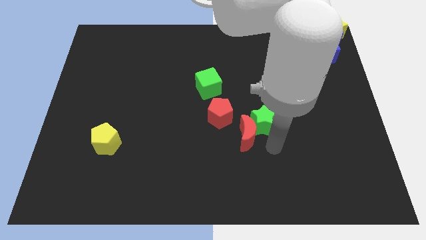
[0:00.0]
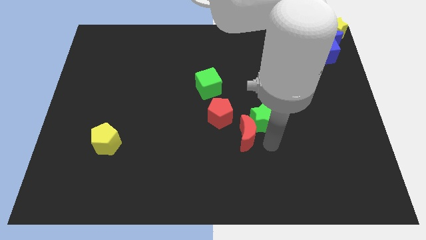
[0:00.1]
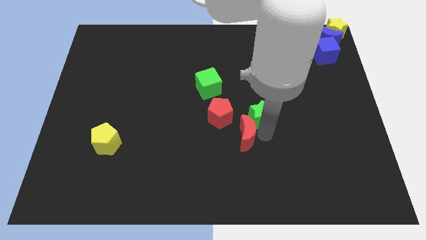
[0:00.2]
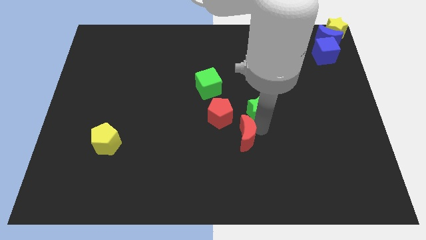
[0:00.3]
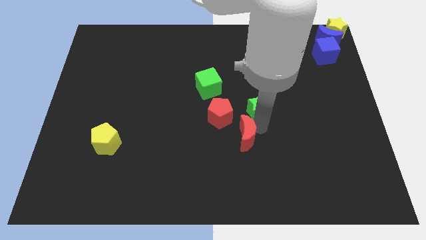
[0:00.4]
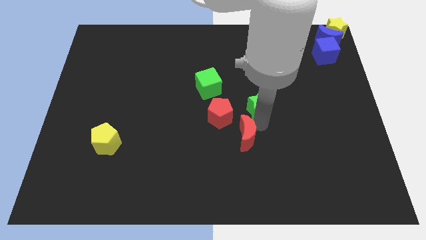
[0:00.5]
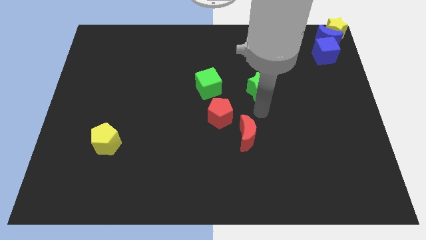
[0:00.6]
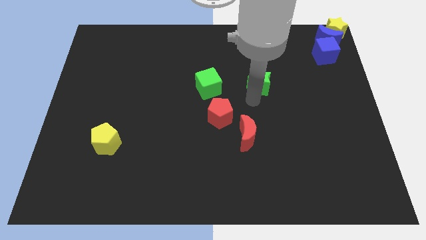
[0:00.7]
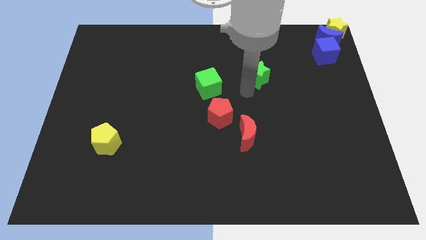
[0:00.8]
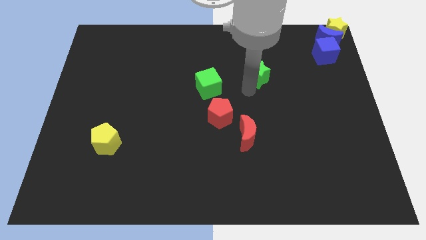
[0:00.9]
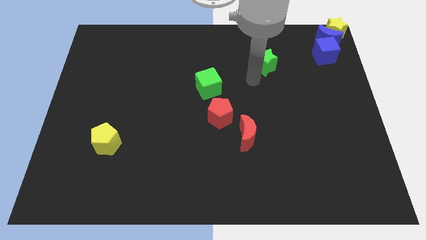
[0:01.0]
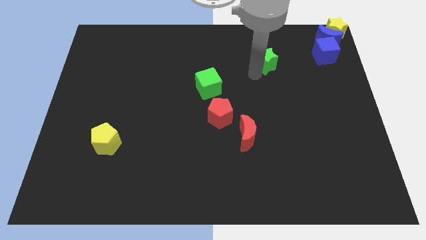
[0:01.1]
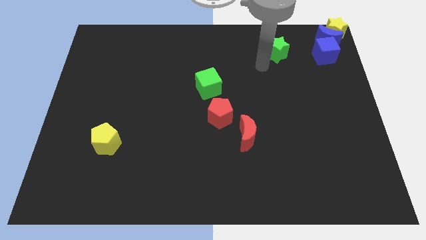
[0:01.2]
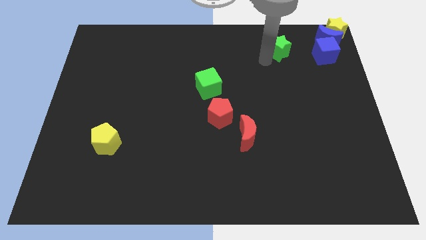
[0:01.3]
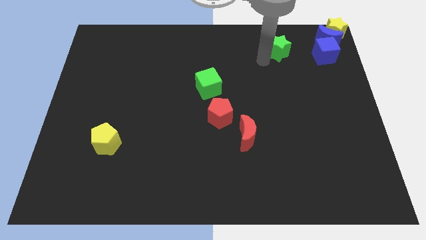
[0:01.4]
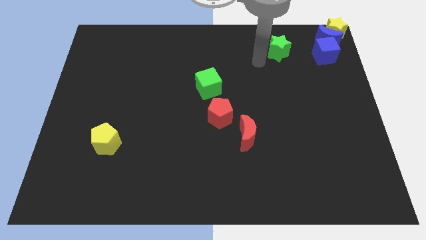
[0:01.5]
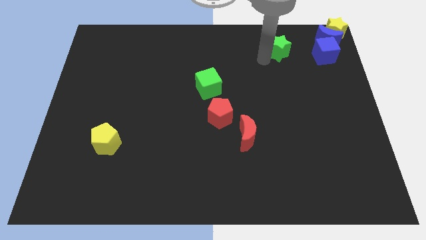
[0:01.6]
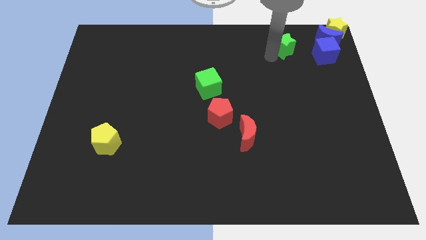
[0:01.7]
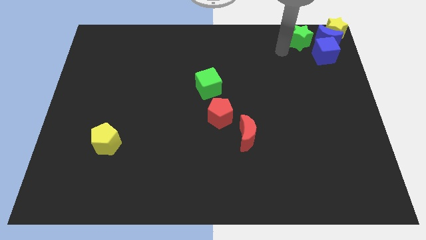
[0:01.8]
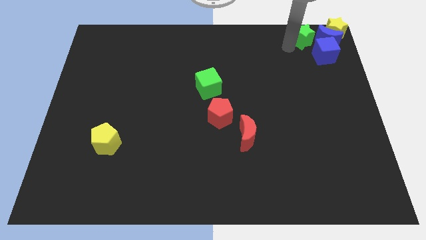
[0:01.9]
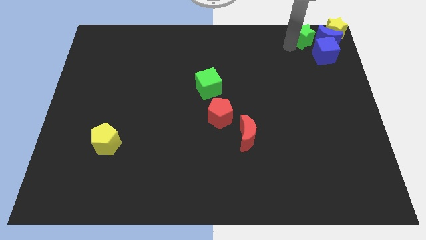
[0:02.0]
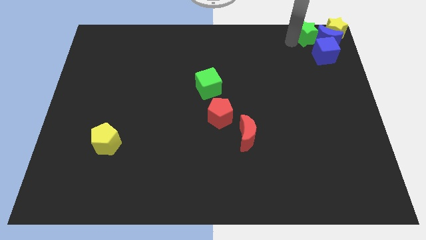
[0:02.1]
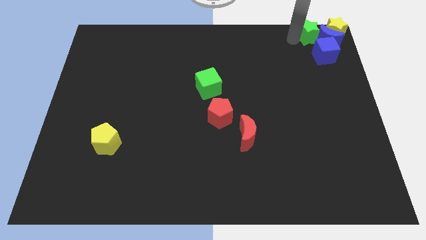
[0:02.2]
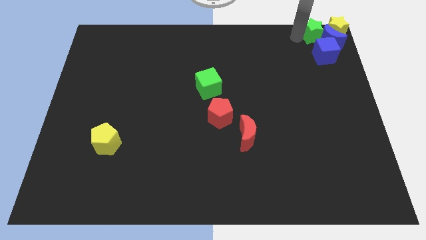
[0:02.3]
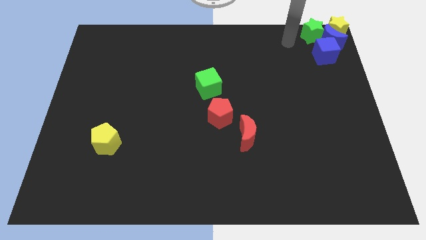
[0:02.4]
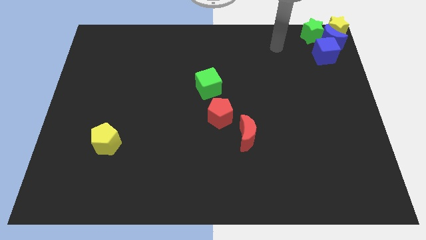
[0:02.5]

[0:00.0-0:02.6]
move the green star diagonal left of yellow star

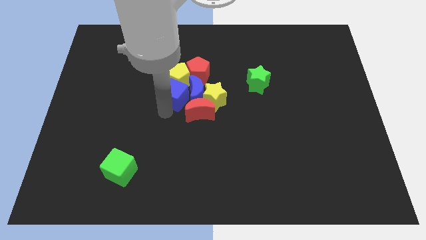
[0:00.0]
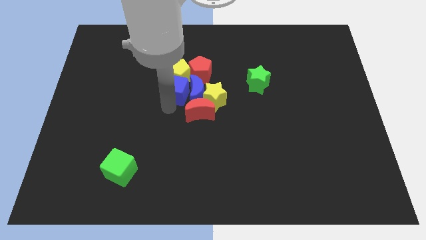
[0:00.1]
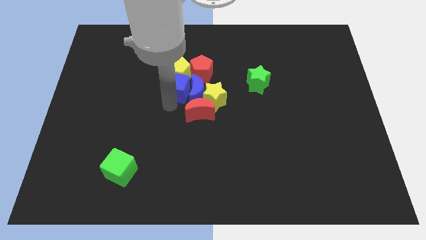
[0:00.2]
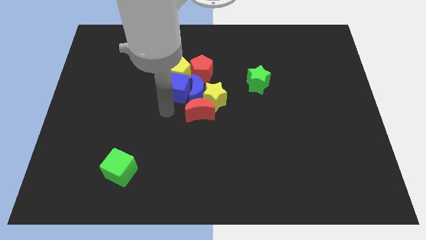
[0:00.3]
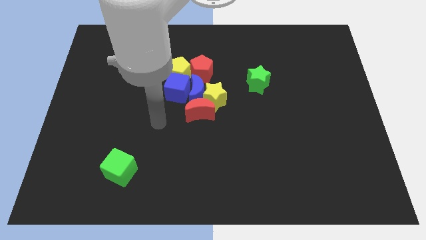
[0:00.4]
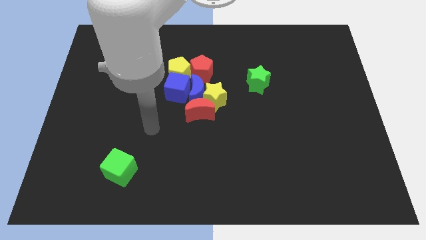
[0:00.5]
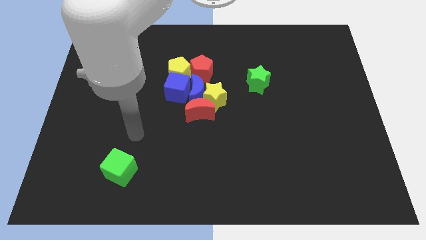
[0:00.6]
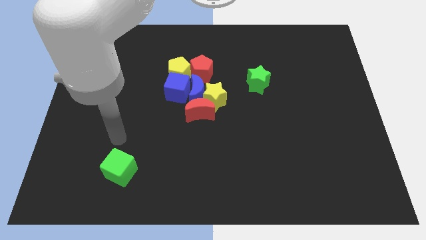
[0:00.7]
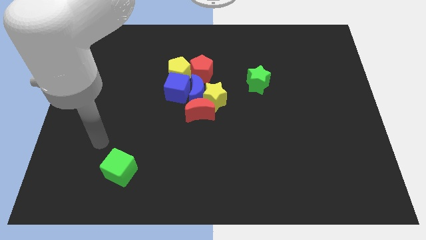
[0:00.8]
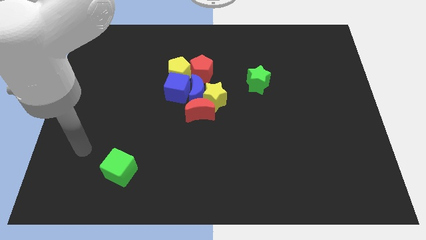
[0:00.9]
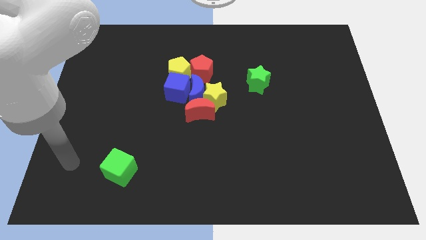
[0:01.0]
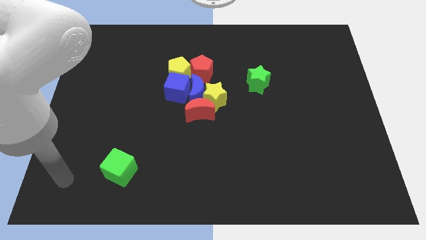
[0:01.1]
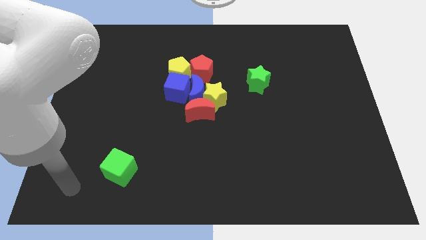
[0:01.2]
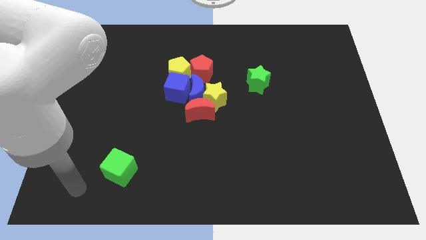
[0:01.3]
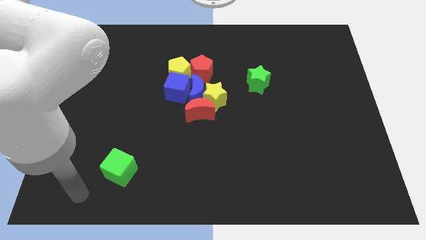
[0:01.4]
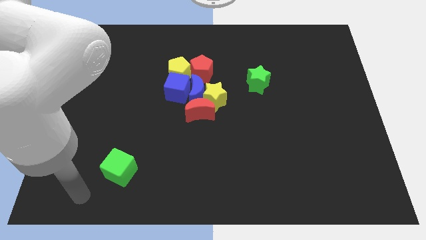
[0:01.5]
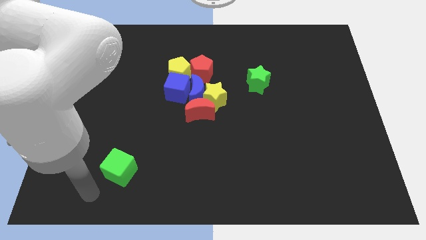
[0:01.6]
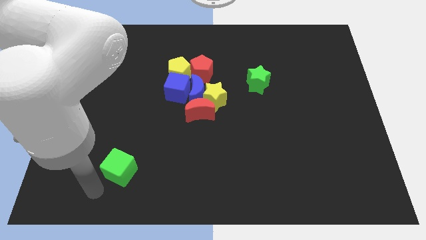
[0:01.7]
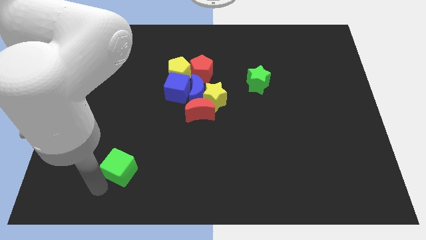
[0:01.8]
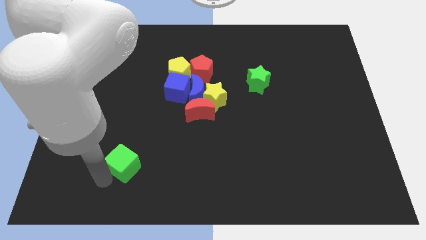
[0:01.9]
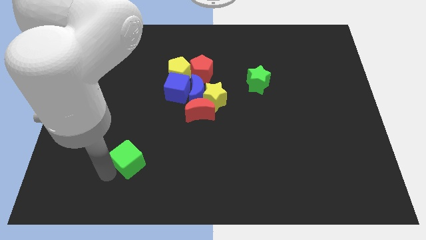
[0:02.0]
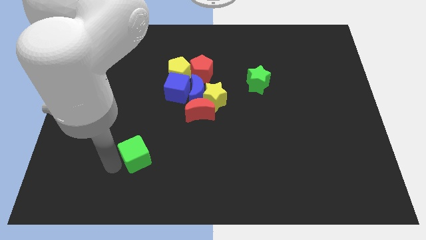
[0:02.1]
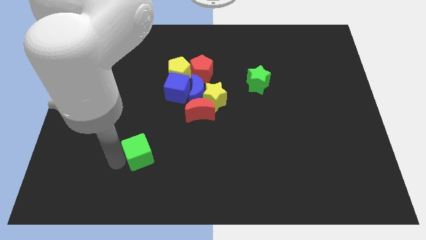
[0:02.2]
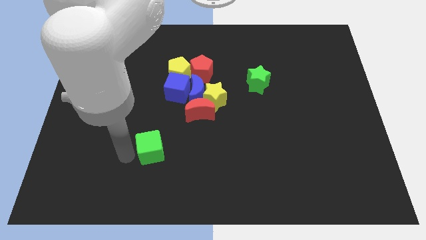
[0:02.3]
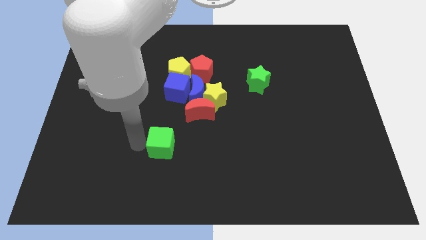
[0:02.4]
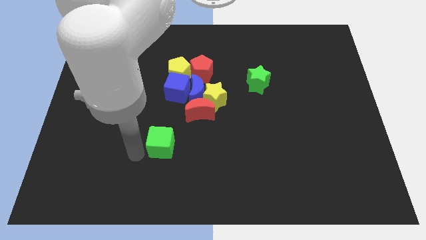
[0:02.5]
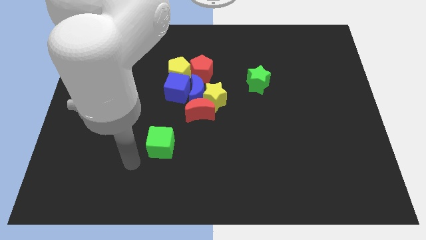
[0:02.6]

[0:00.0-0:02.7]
move away from group of blocks

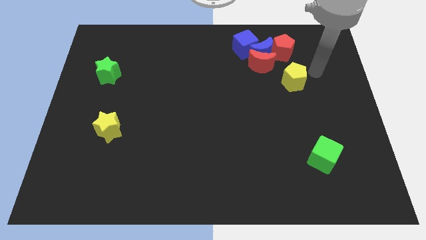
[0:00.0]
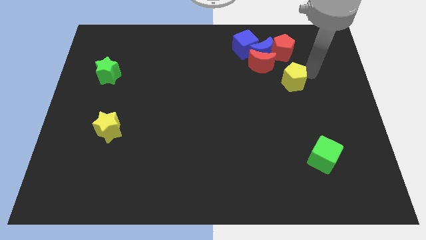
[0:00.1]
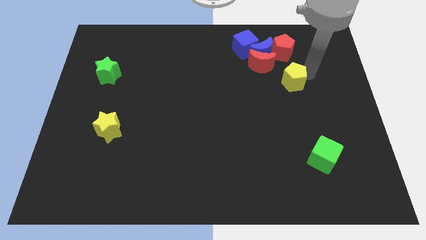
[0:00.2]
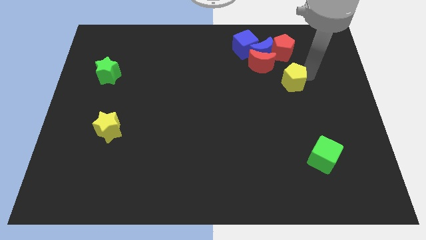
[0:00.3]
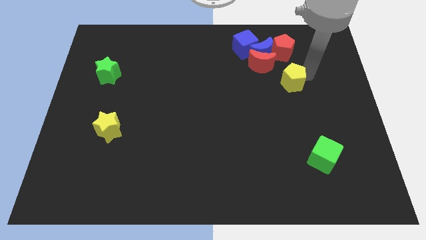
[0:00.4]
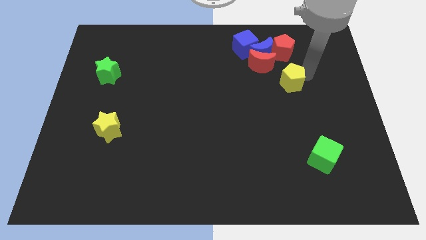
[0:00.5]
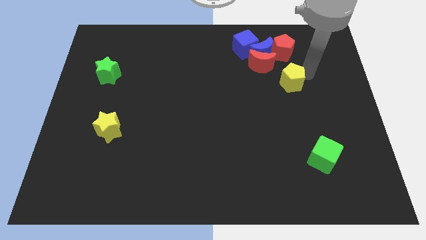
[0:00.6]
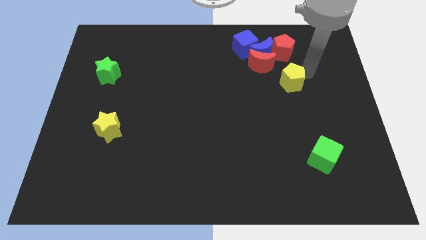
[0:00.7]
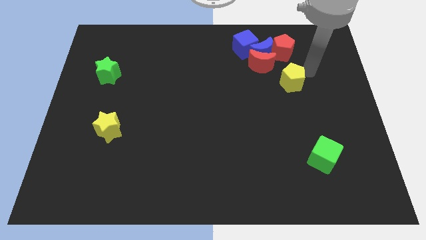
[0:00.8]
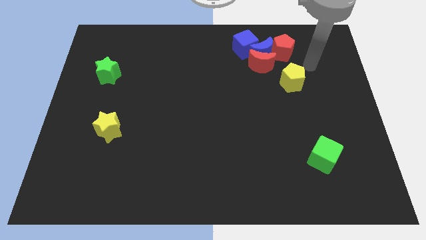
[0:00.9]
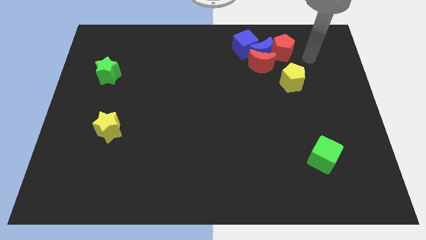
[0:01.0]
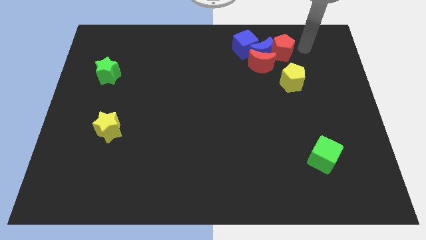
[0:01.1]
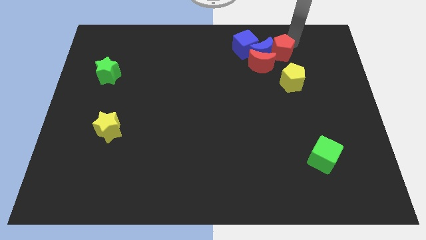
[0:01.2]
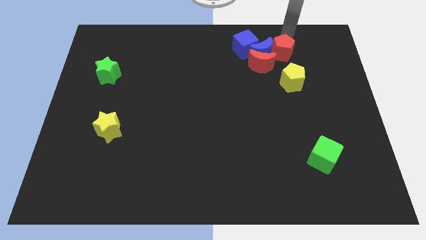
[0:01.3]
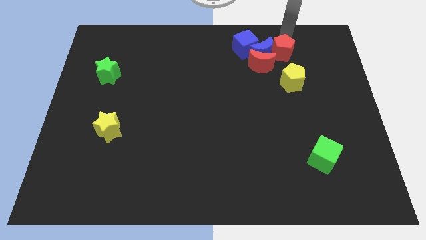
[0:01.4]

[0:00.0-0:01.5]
move yellow pentagon slightly

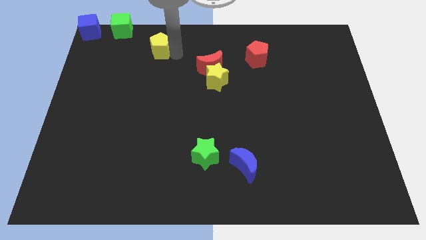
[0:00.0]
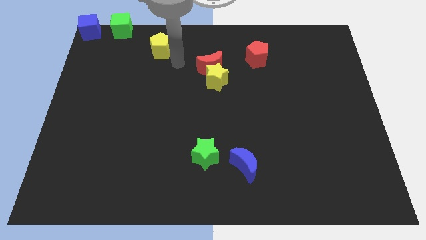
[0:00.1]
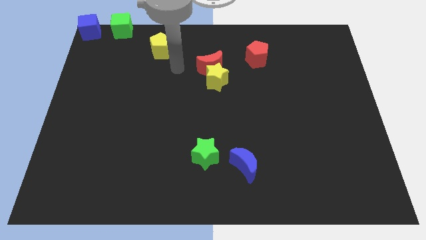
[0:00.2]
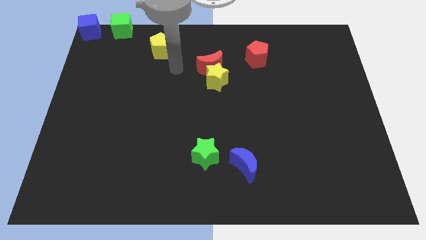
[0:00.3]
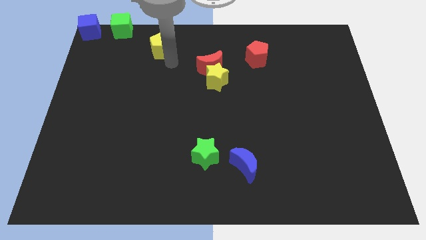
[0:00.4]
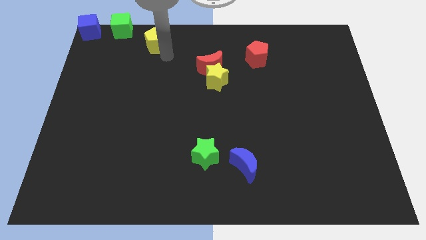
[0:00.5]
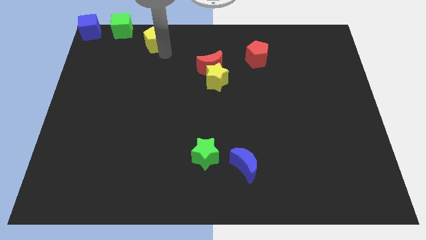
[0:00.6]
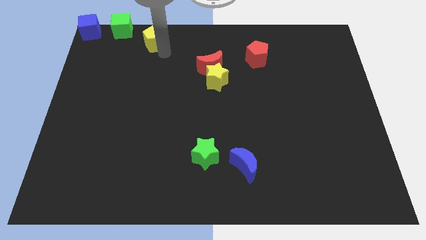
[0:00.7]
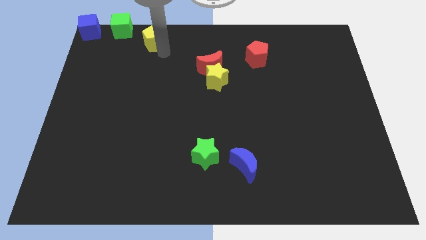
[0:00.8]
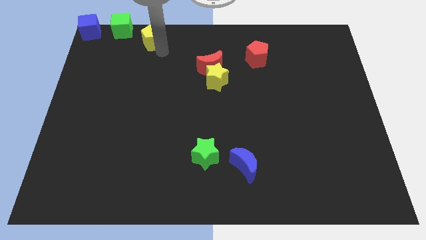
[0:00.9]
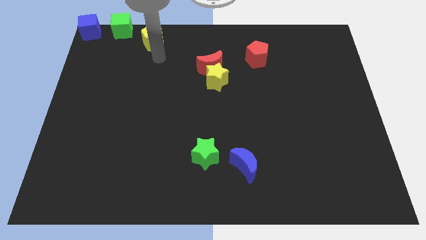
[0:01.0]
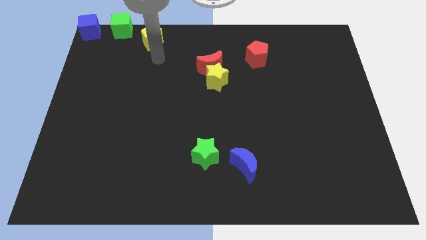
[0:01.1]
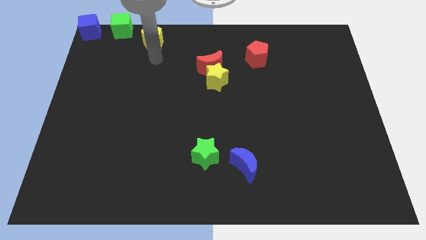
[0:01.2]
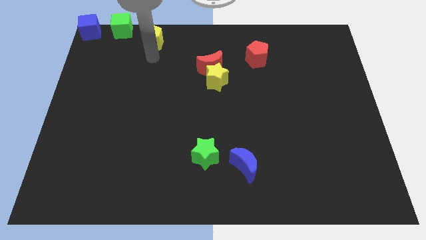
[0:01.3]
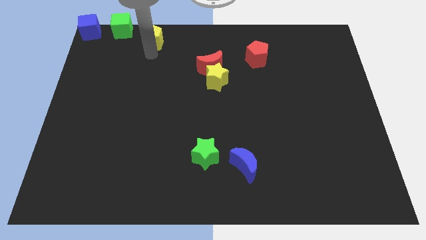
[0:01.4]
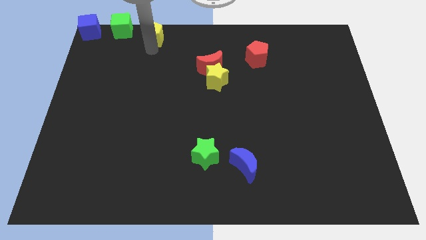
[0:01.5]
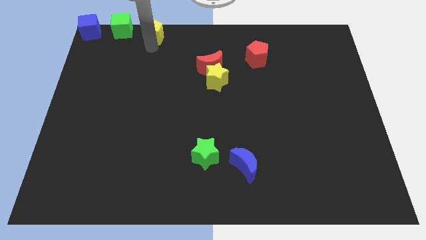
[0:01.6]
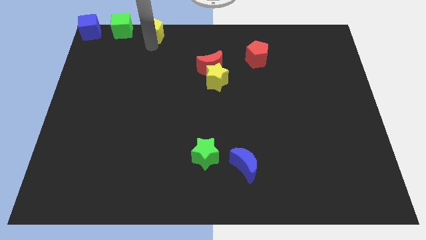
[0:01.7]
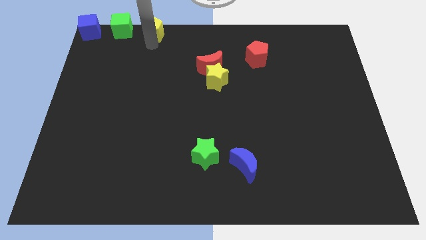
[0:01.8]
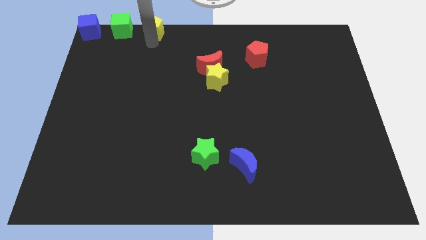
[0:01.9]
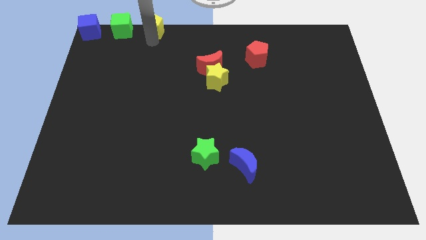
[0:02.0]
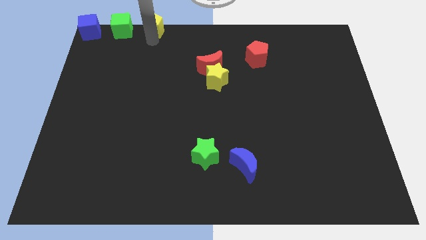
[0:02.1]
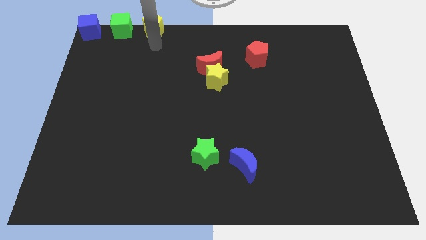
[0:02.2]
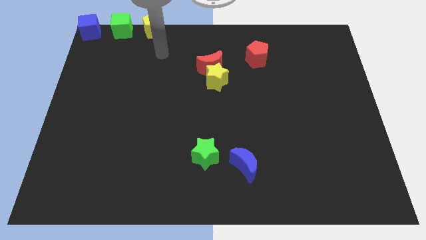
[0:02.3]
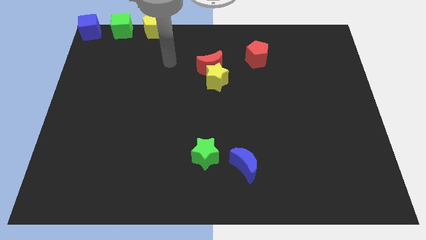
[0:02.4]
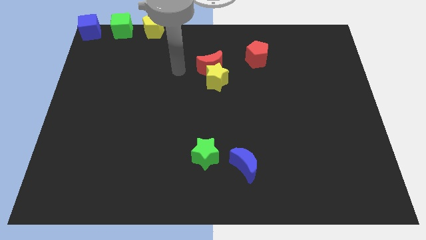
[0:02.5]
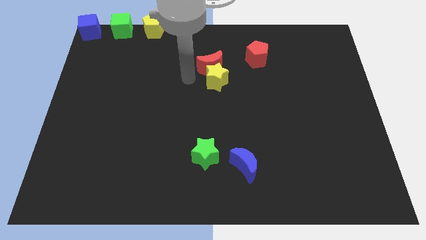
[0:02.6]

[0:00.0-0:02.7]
move the yellow pentagon to the right of the green cube
